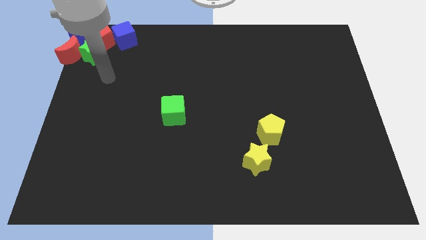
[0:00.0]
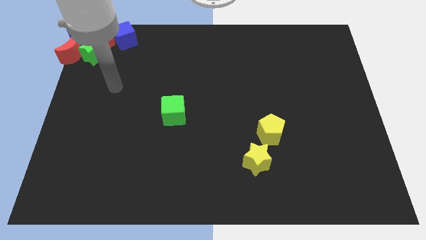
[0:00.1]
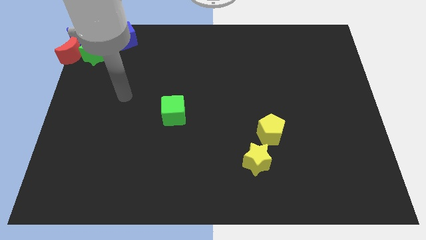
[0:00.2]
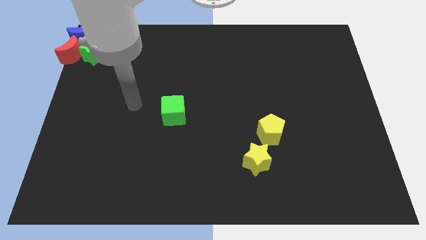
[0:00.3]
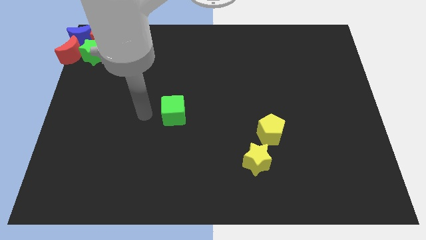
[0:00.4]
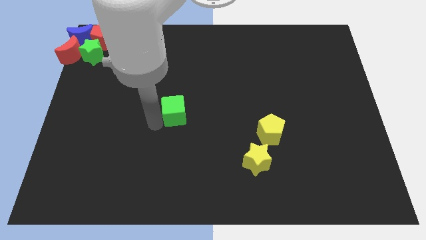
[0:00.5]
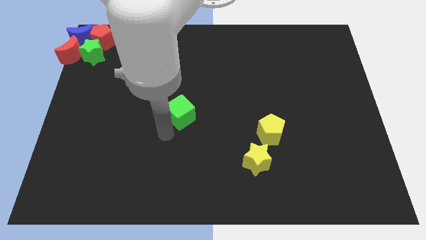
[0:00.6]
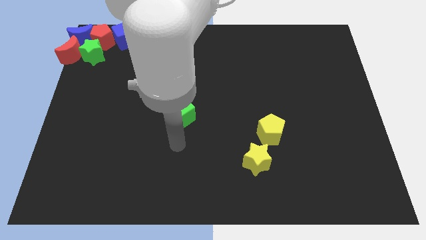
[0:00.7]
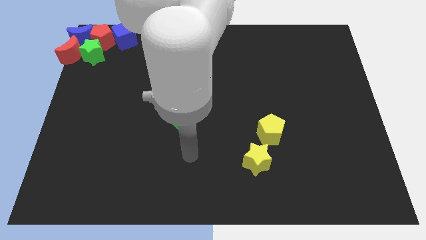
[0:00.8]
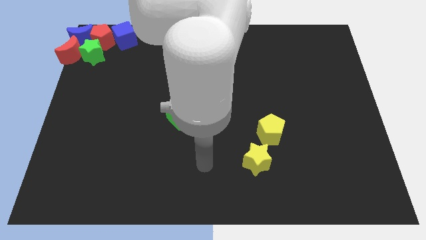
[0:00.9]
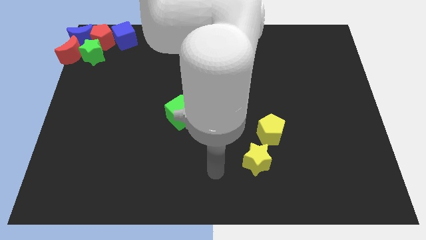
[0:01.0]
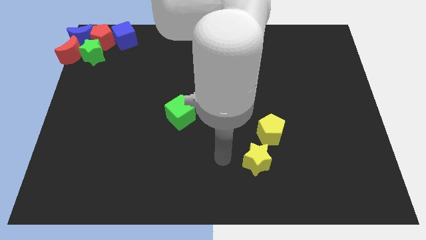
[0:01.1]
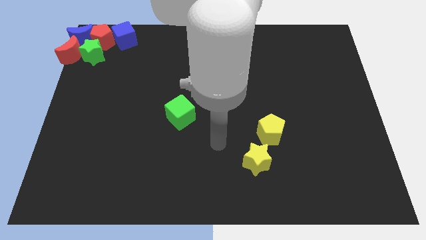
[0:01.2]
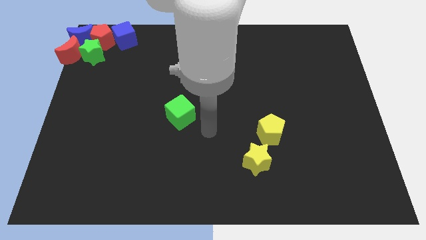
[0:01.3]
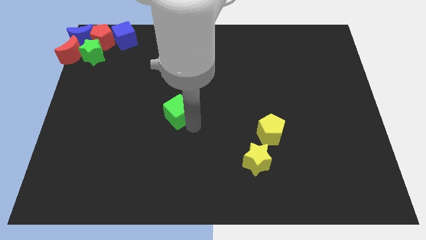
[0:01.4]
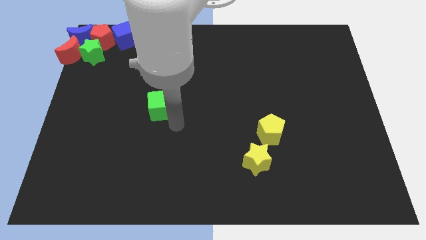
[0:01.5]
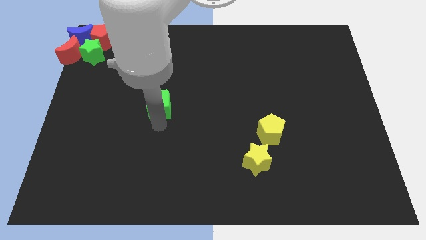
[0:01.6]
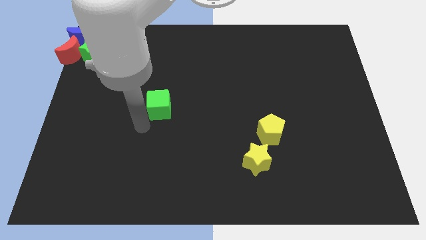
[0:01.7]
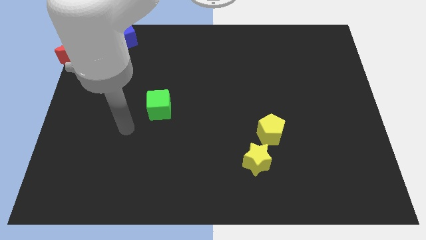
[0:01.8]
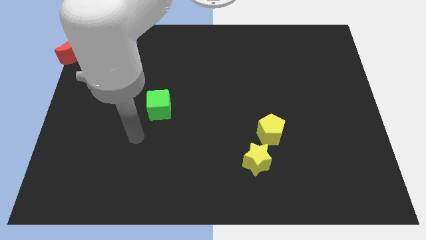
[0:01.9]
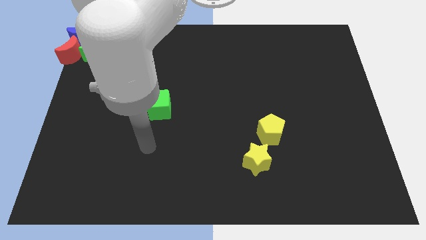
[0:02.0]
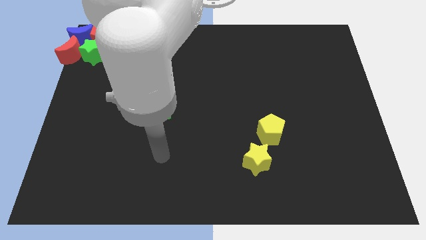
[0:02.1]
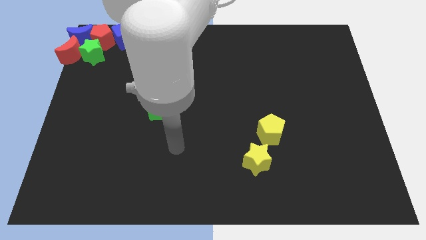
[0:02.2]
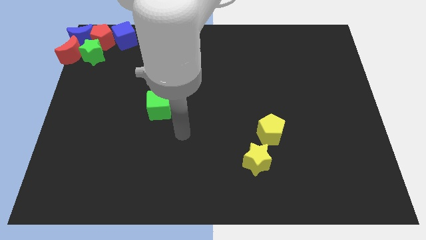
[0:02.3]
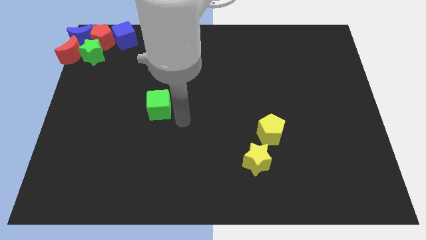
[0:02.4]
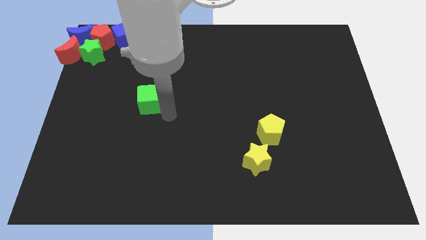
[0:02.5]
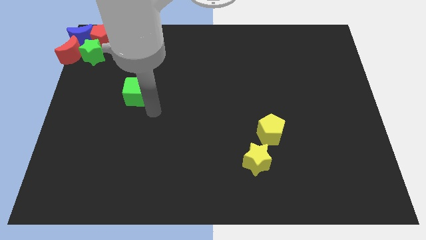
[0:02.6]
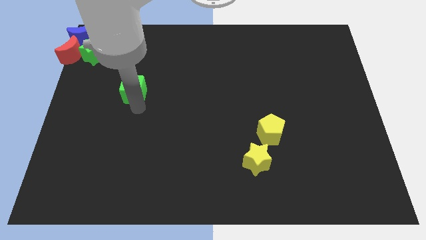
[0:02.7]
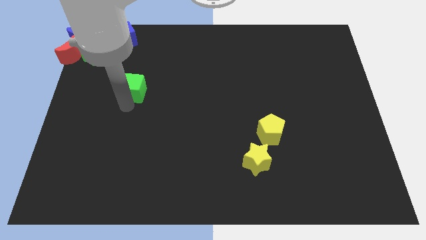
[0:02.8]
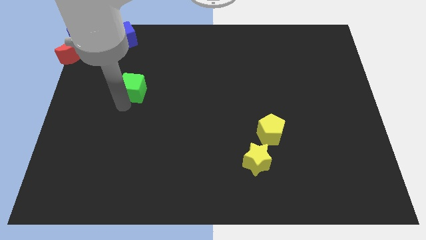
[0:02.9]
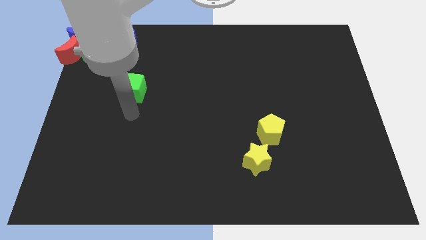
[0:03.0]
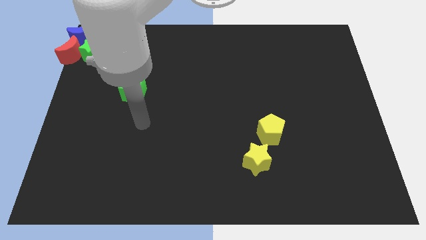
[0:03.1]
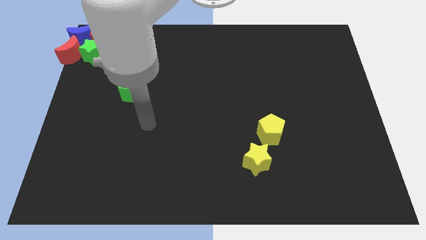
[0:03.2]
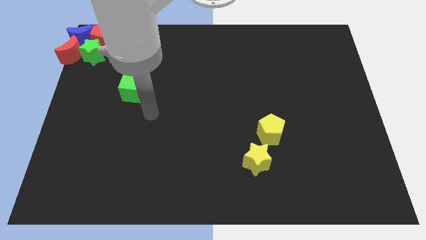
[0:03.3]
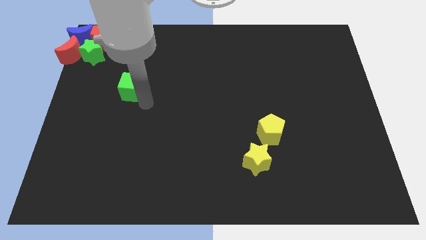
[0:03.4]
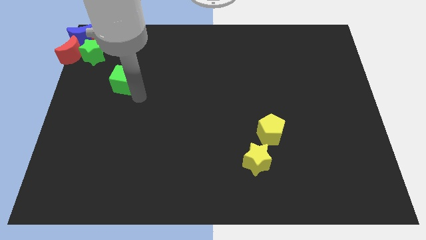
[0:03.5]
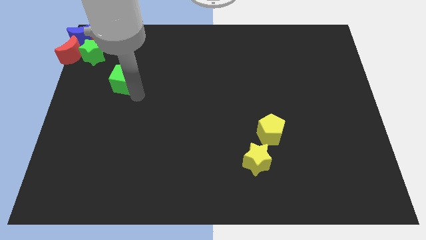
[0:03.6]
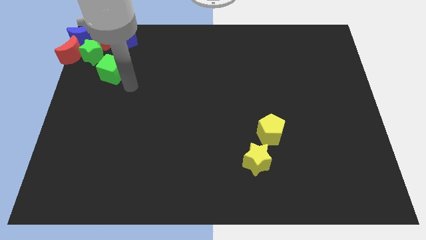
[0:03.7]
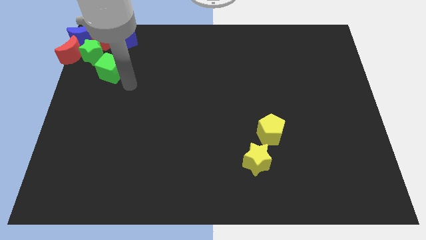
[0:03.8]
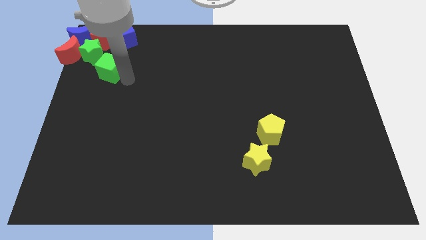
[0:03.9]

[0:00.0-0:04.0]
push the green cube towards the green star

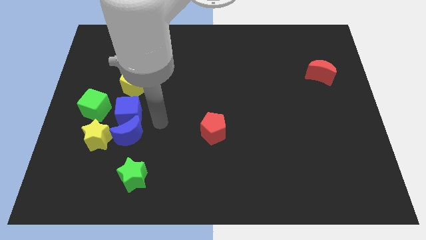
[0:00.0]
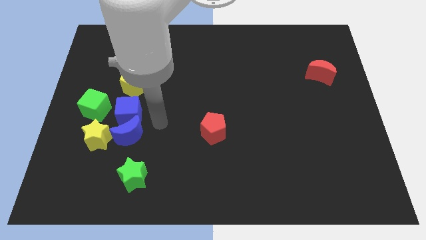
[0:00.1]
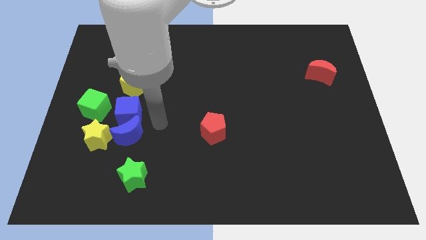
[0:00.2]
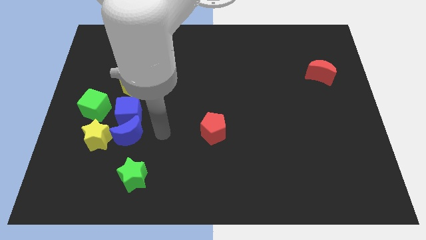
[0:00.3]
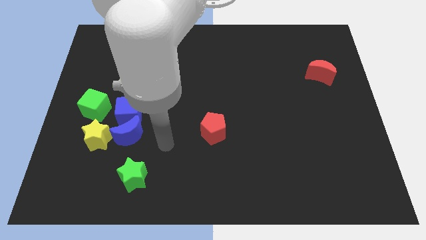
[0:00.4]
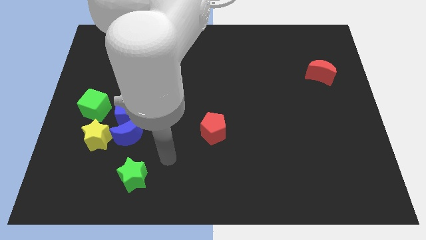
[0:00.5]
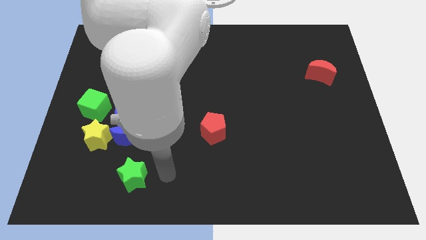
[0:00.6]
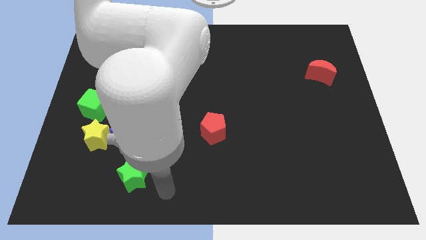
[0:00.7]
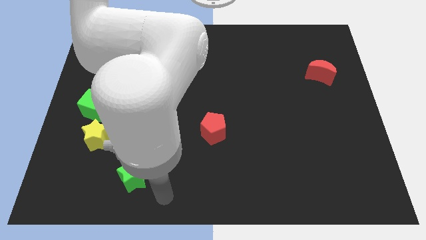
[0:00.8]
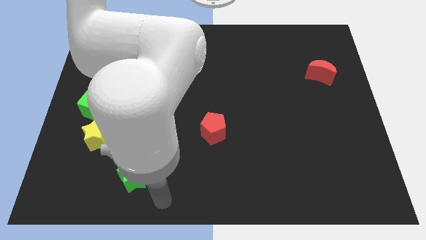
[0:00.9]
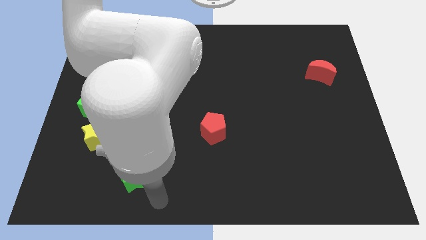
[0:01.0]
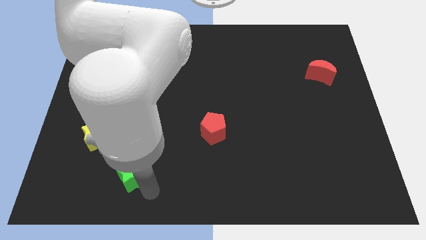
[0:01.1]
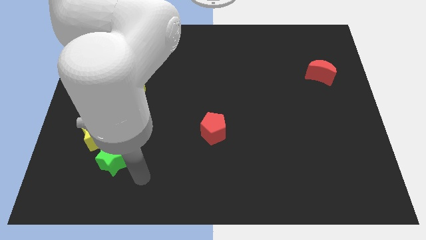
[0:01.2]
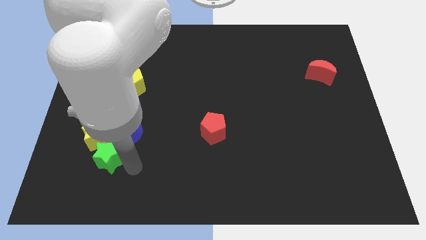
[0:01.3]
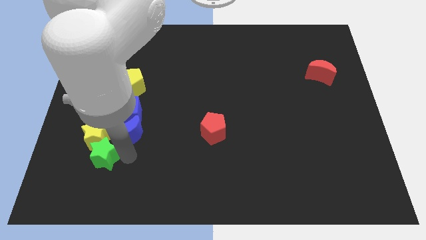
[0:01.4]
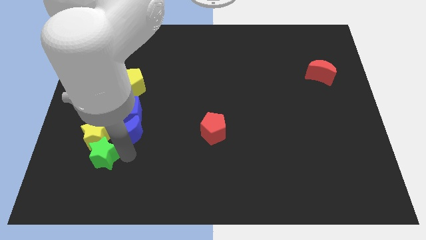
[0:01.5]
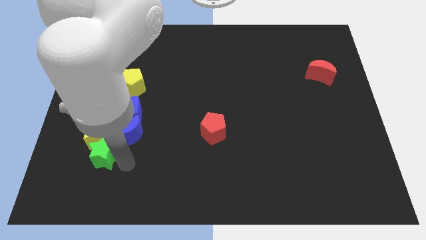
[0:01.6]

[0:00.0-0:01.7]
move the green star down to the yellow star

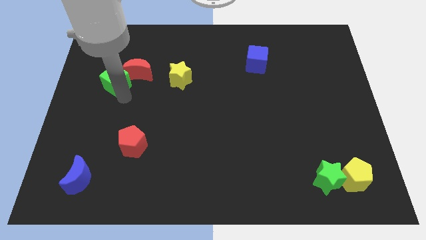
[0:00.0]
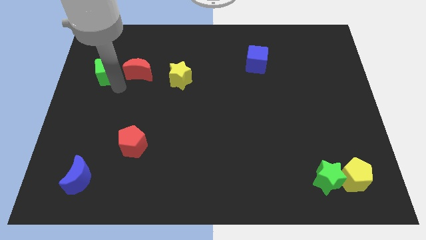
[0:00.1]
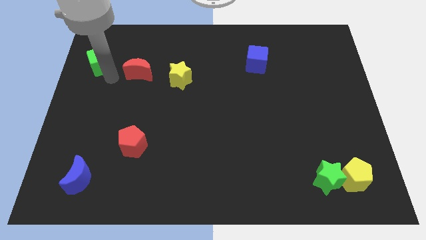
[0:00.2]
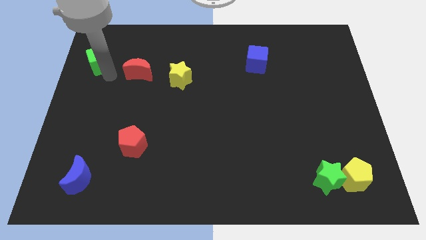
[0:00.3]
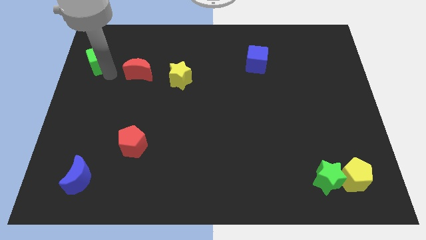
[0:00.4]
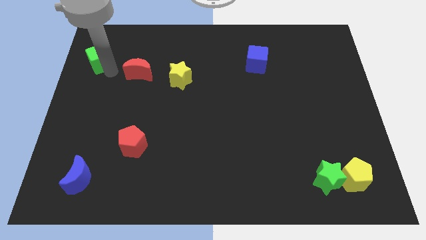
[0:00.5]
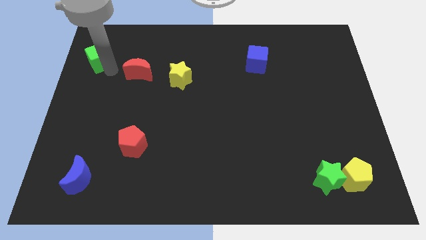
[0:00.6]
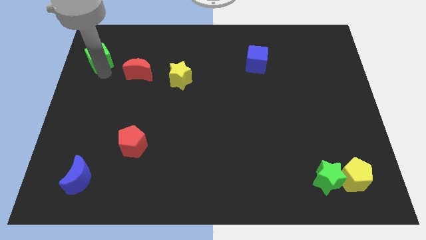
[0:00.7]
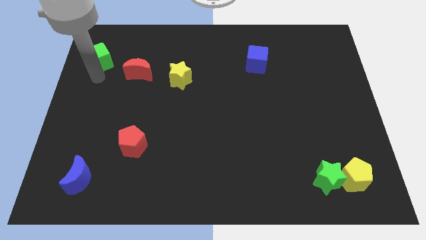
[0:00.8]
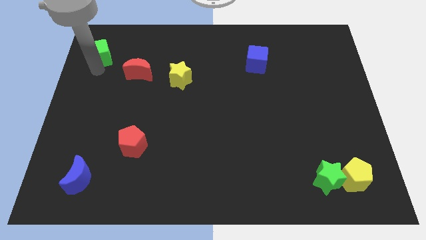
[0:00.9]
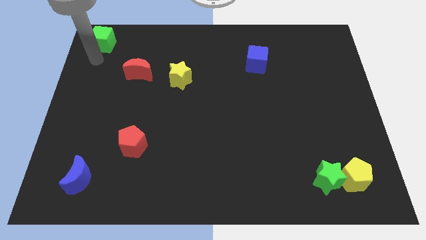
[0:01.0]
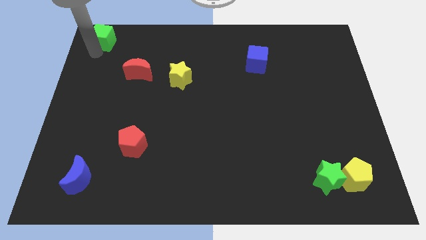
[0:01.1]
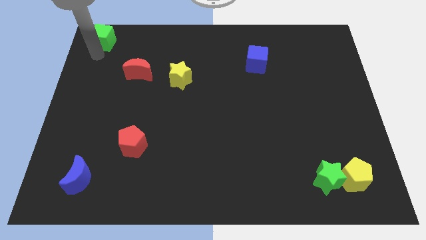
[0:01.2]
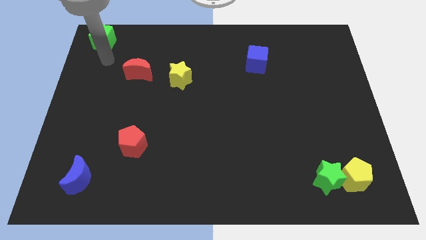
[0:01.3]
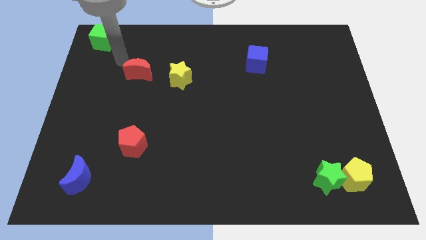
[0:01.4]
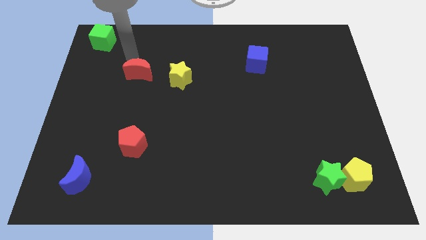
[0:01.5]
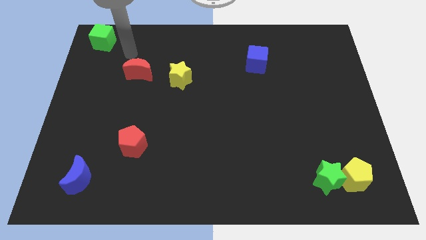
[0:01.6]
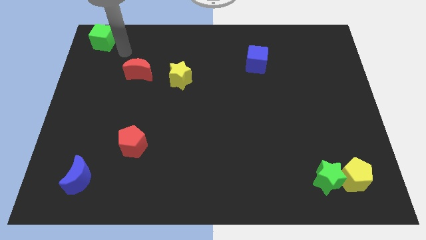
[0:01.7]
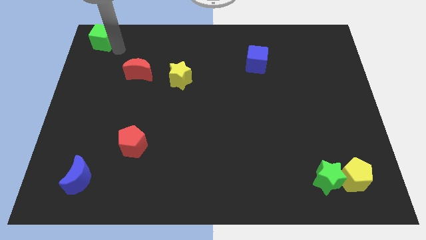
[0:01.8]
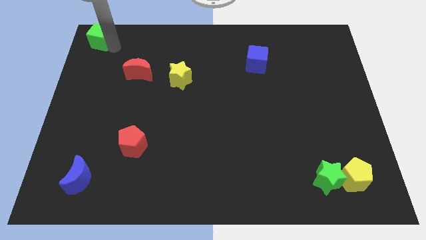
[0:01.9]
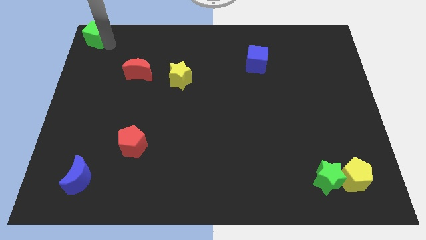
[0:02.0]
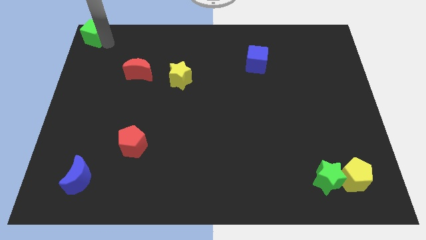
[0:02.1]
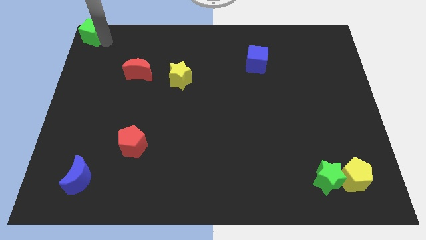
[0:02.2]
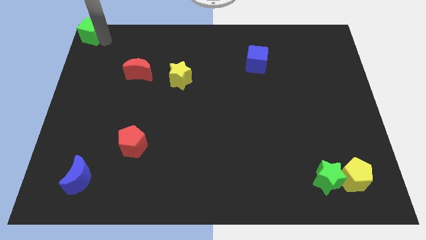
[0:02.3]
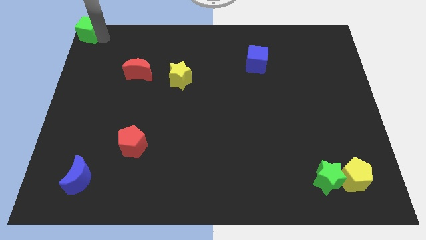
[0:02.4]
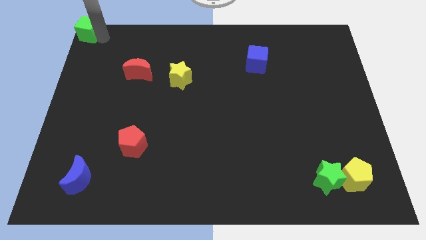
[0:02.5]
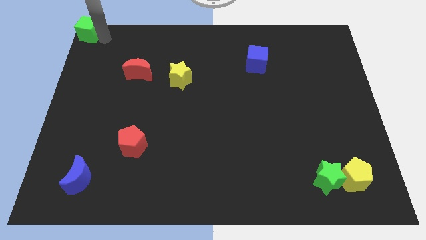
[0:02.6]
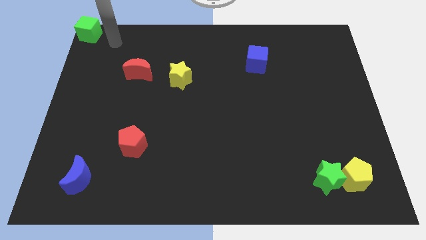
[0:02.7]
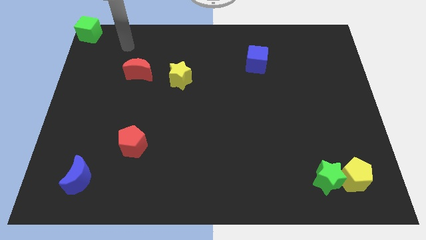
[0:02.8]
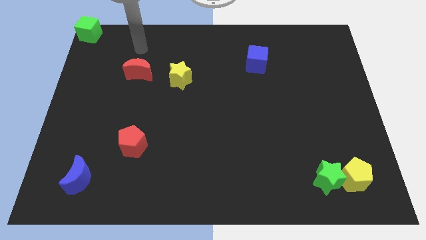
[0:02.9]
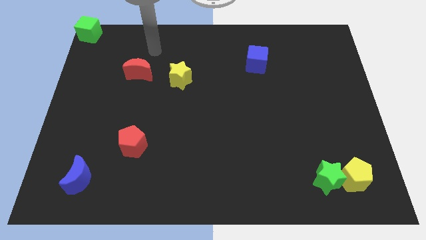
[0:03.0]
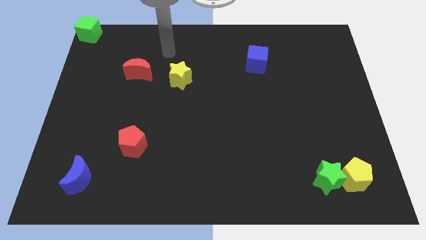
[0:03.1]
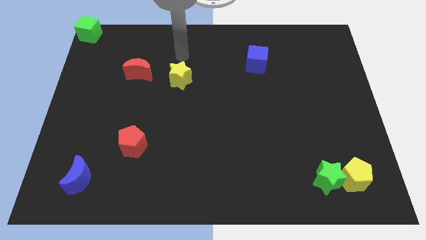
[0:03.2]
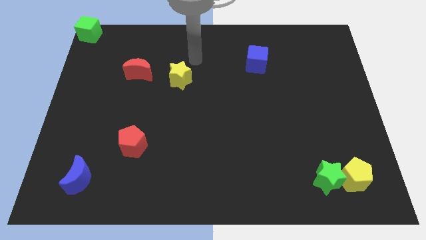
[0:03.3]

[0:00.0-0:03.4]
place the green cube on left top of the board
